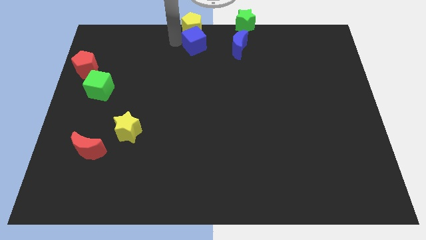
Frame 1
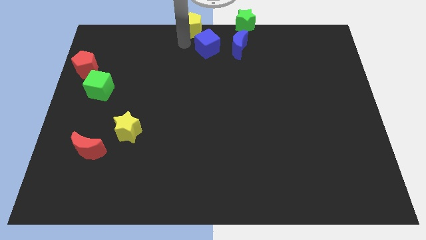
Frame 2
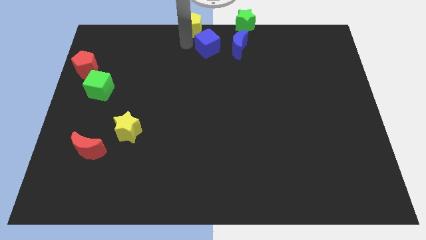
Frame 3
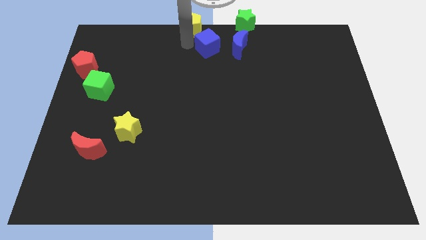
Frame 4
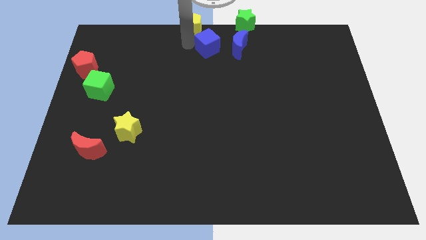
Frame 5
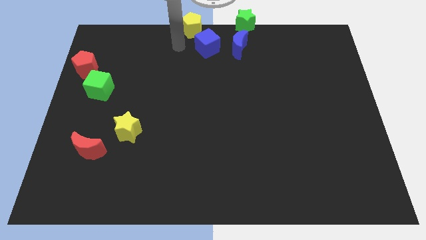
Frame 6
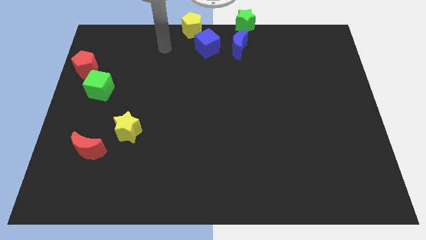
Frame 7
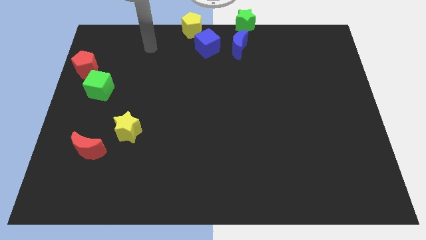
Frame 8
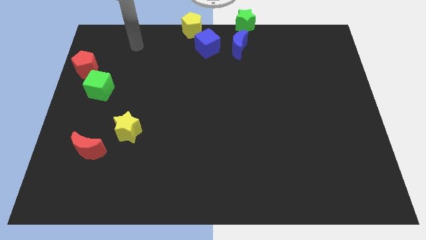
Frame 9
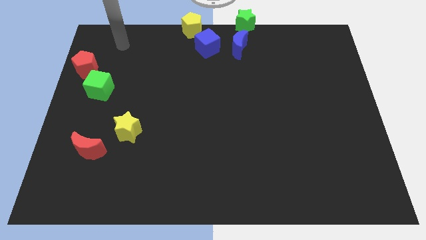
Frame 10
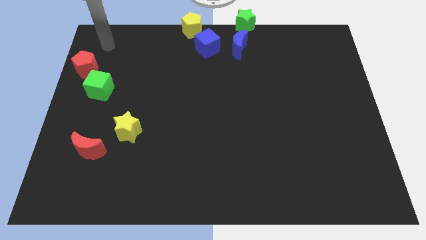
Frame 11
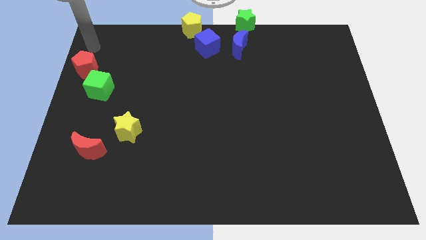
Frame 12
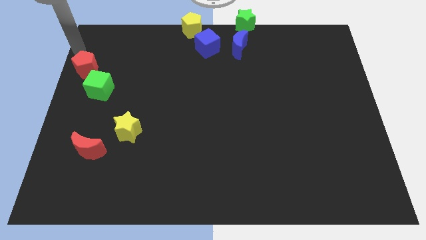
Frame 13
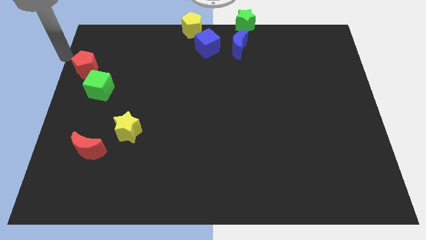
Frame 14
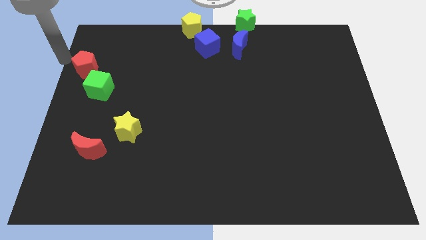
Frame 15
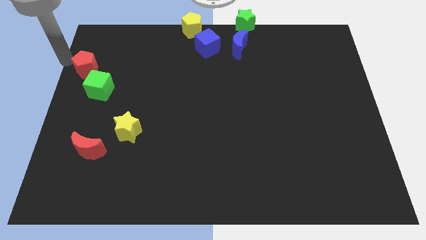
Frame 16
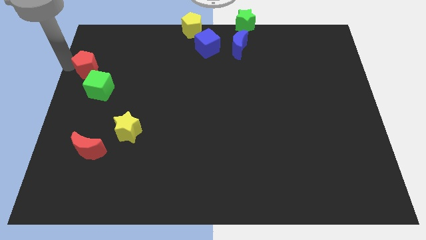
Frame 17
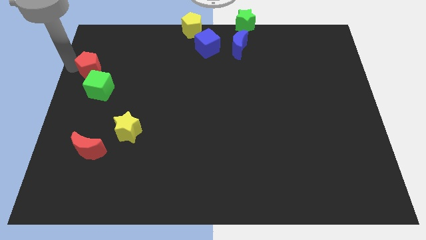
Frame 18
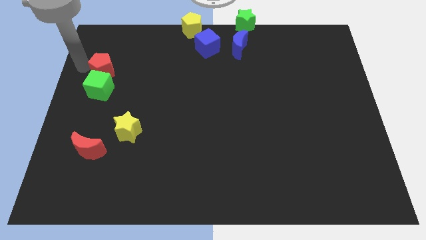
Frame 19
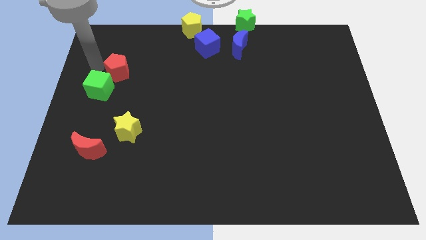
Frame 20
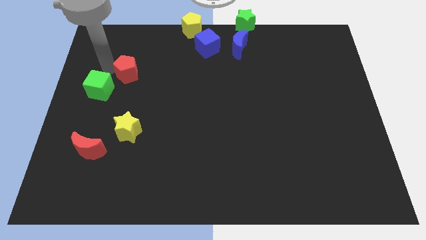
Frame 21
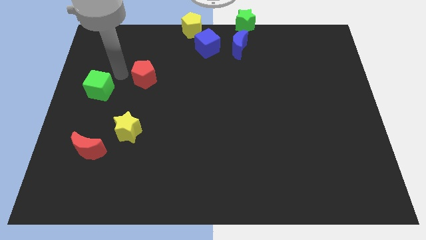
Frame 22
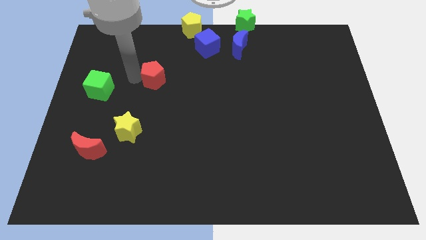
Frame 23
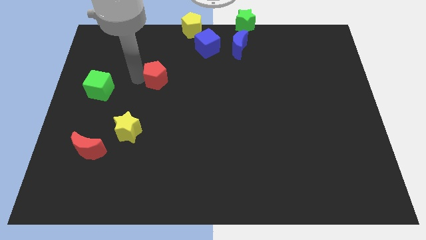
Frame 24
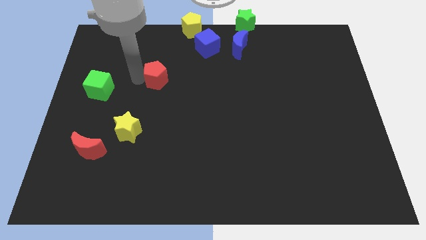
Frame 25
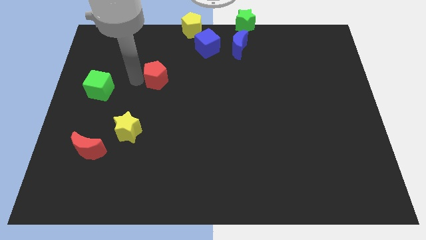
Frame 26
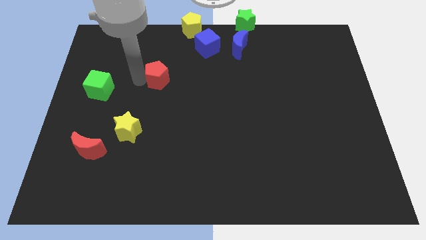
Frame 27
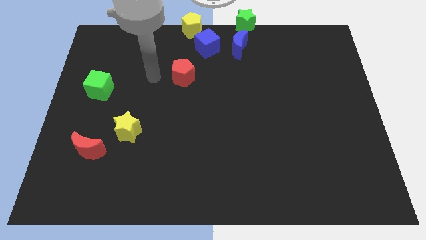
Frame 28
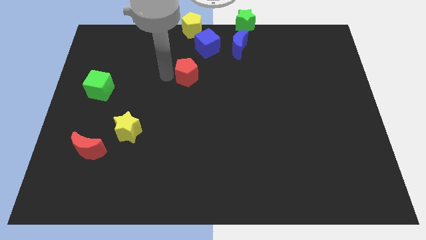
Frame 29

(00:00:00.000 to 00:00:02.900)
push the red pentagon diagonal to the yellow star

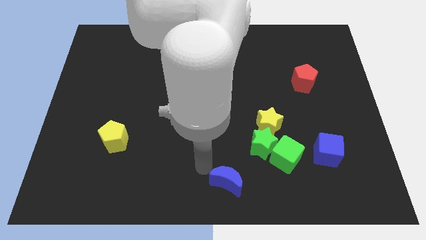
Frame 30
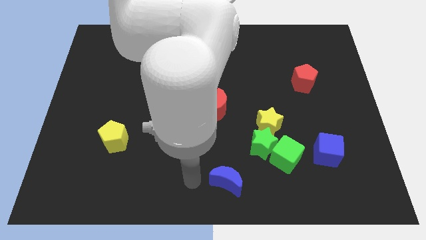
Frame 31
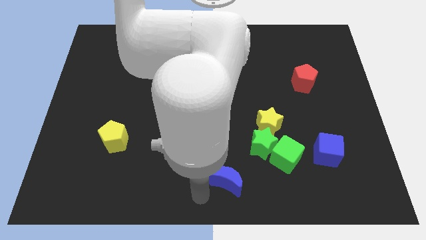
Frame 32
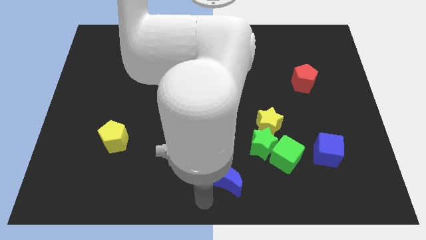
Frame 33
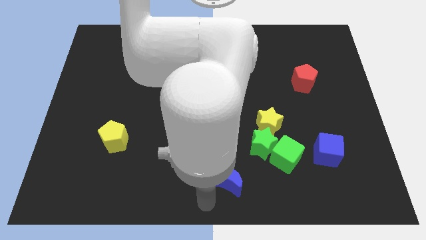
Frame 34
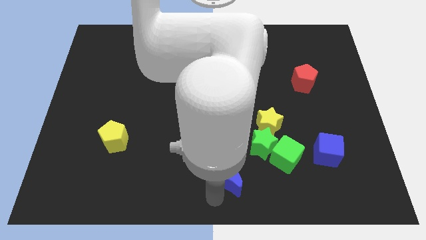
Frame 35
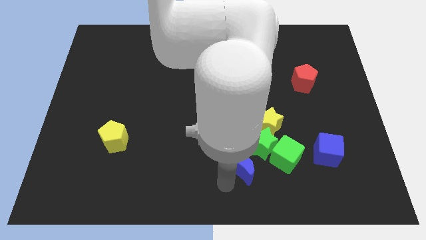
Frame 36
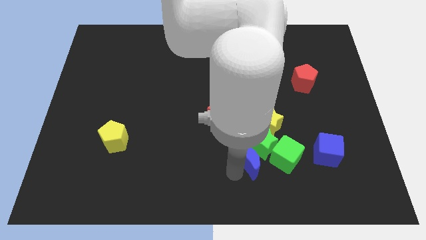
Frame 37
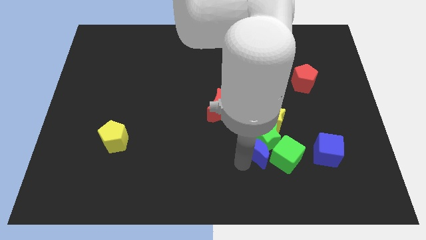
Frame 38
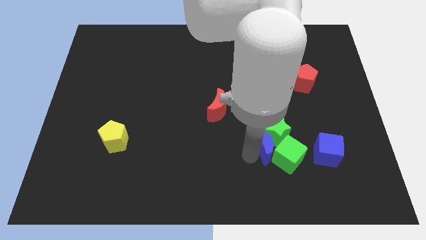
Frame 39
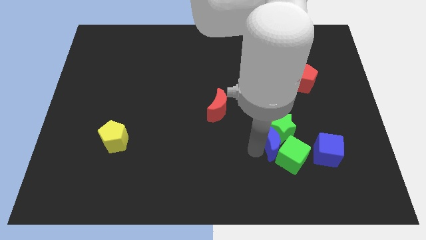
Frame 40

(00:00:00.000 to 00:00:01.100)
move the blue crescent into the green star

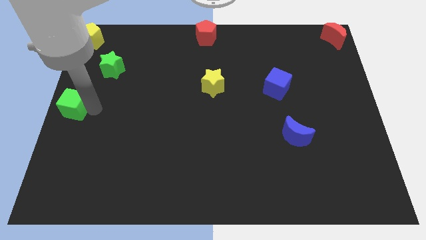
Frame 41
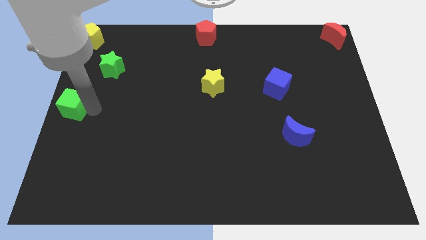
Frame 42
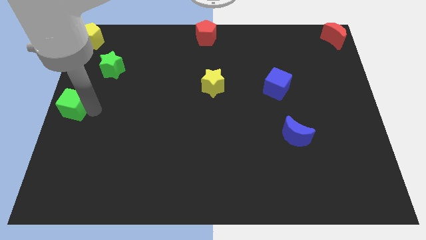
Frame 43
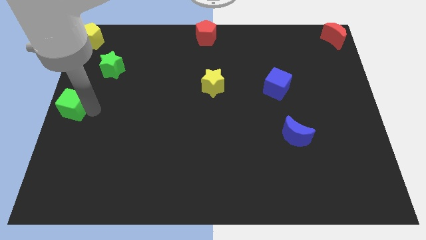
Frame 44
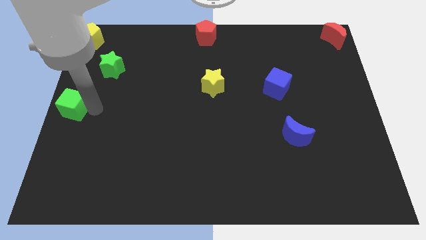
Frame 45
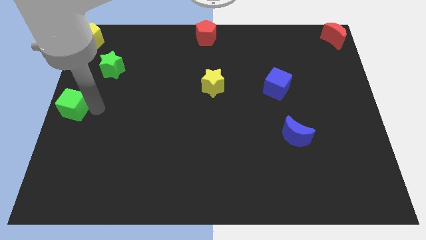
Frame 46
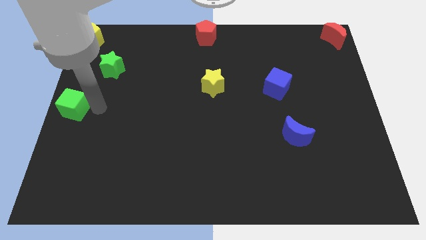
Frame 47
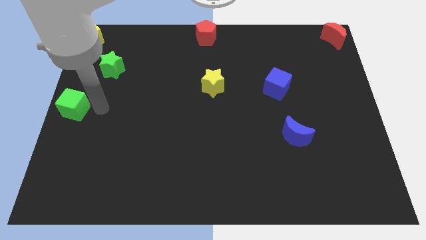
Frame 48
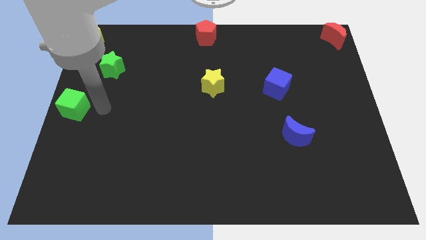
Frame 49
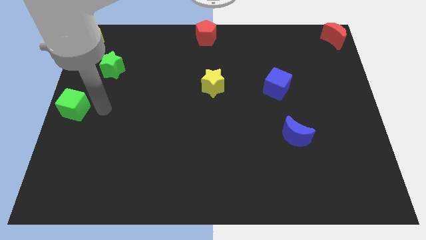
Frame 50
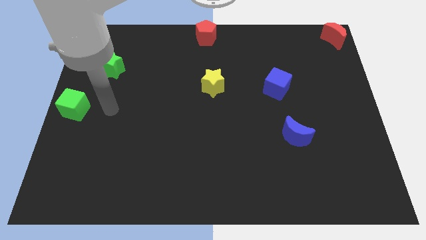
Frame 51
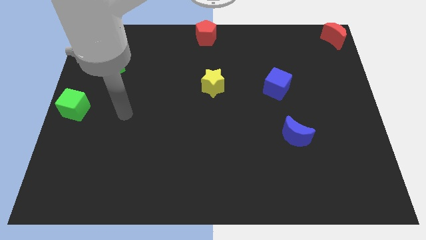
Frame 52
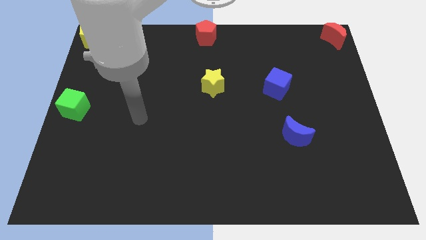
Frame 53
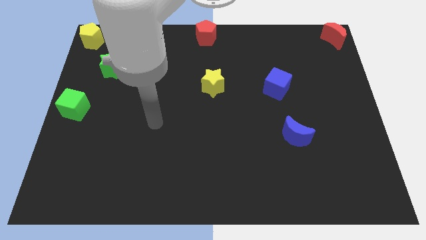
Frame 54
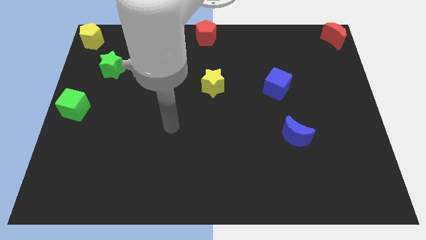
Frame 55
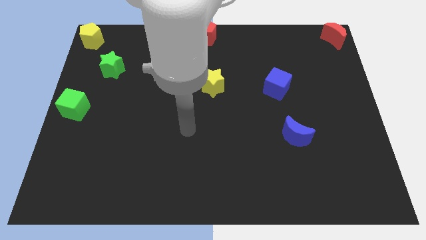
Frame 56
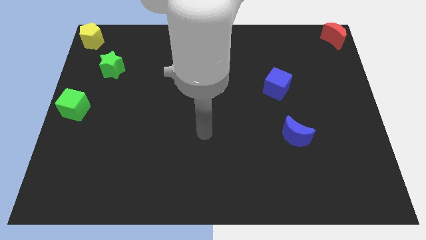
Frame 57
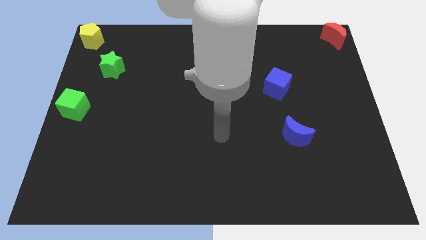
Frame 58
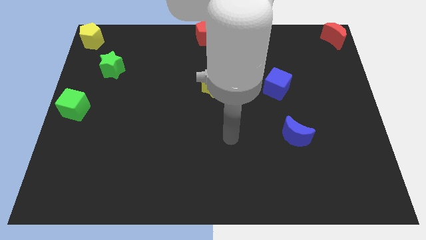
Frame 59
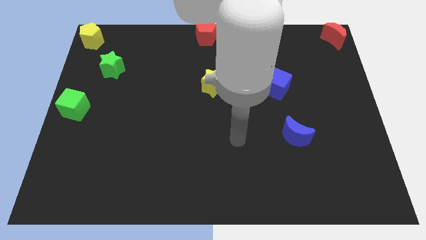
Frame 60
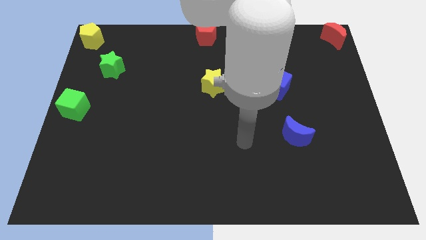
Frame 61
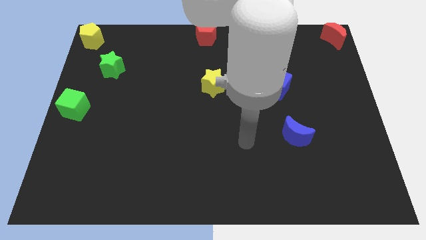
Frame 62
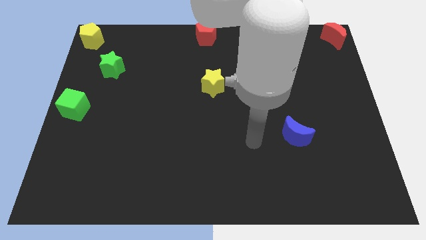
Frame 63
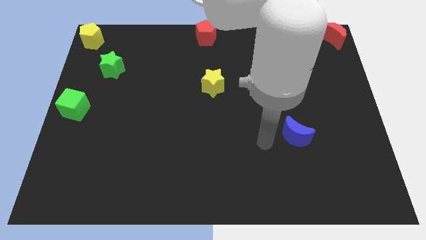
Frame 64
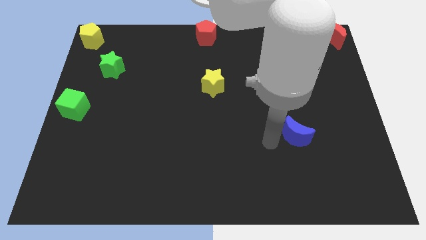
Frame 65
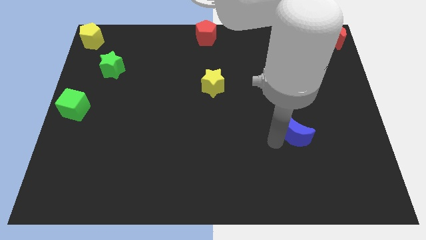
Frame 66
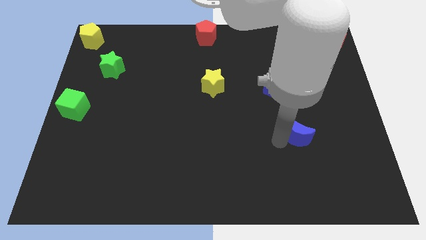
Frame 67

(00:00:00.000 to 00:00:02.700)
move the arm to the left side of the blue crescent

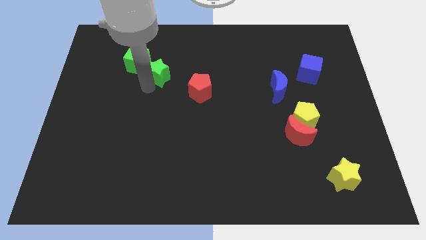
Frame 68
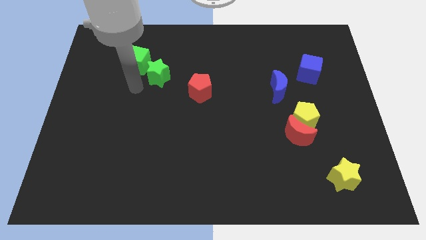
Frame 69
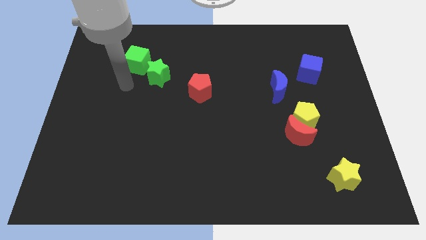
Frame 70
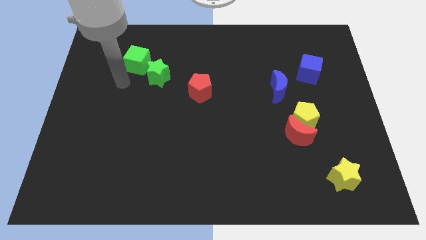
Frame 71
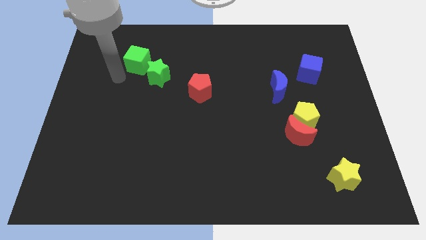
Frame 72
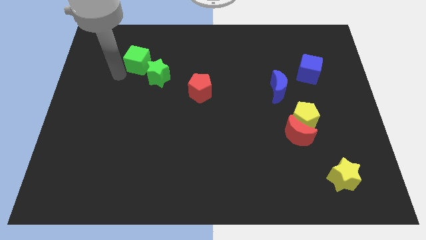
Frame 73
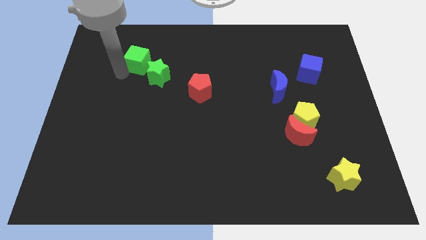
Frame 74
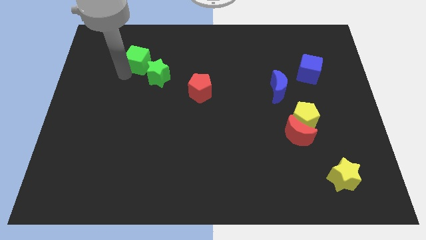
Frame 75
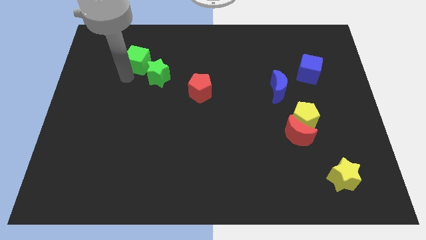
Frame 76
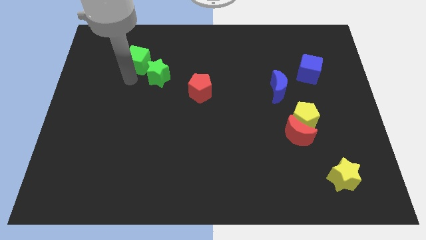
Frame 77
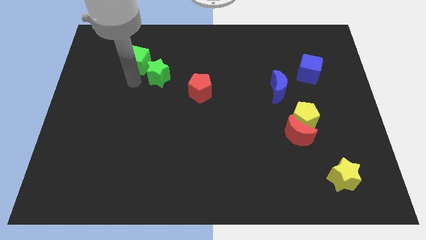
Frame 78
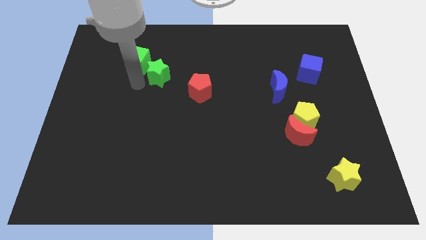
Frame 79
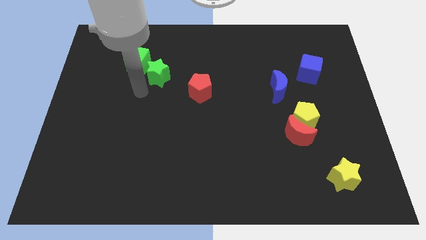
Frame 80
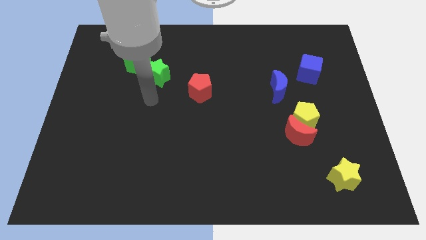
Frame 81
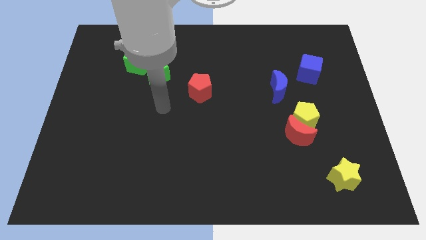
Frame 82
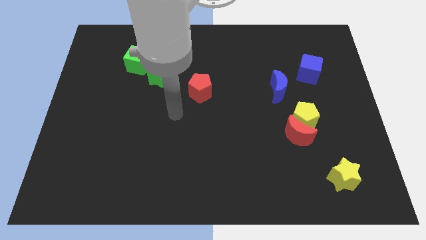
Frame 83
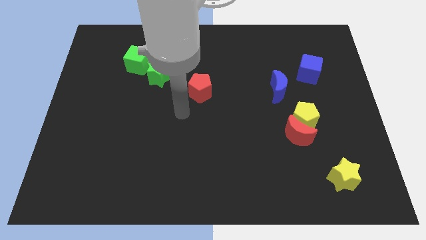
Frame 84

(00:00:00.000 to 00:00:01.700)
place the green star diagonally in between the green cube and red pentagon

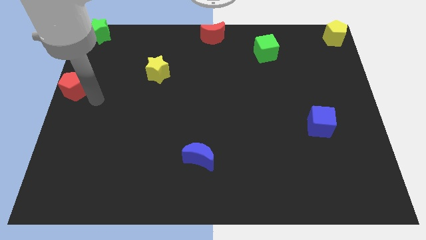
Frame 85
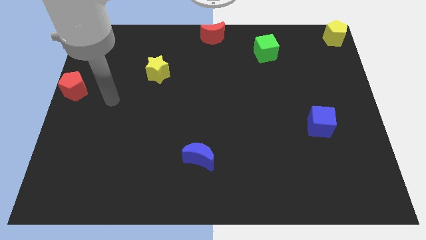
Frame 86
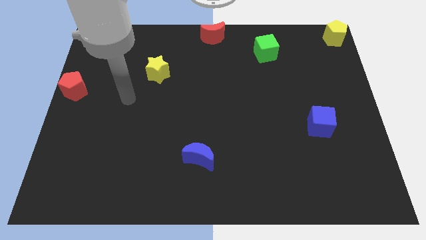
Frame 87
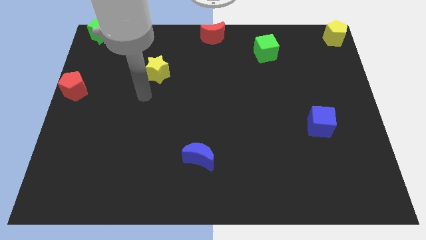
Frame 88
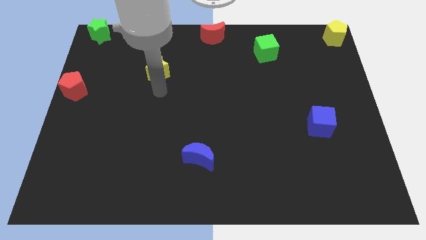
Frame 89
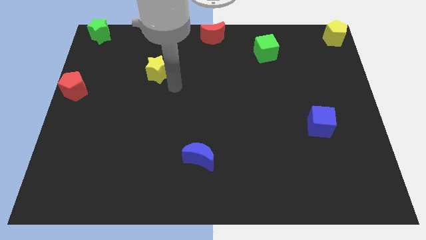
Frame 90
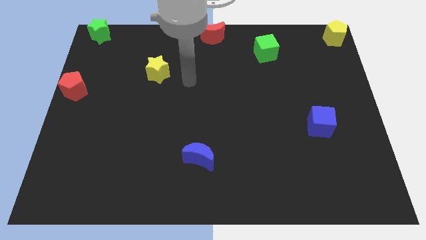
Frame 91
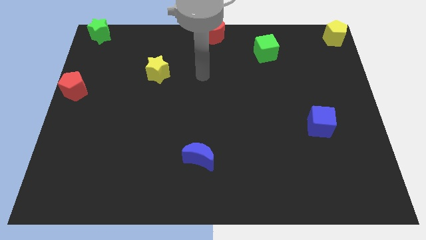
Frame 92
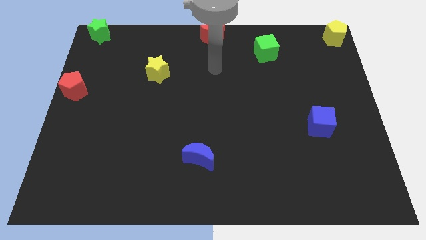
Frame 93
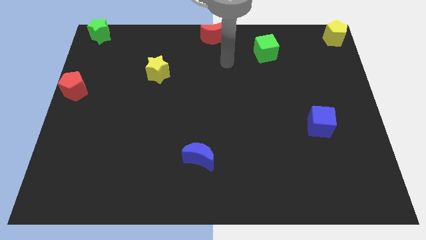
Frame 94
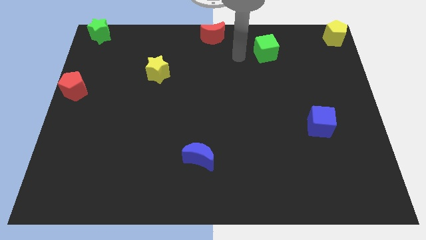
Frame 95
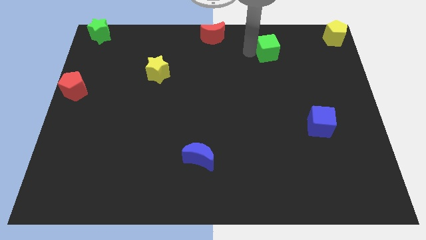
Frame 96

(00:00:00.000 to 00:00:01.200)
move the arm away from the red pentagon
